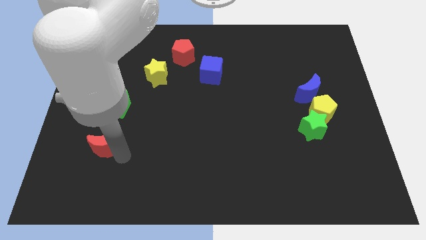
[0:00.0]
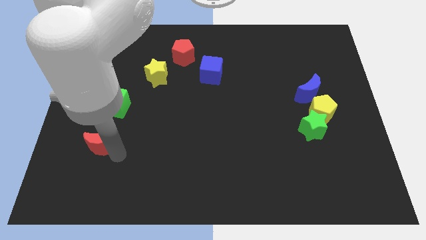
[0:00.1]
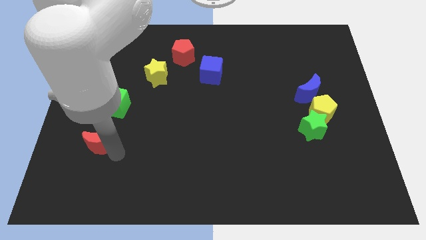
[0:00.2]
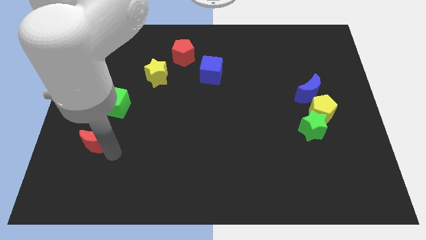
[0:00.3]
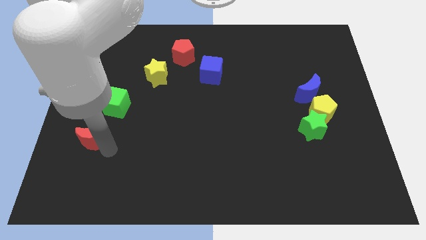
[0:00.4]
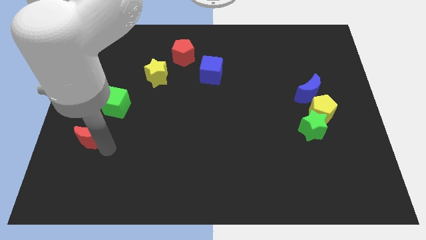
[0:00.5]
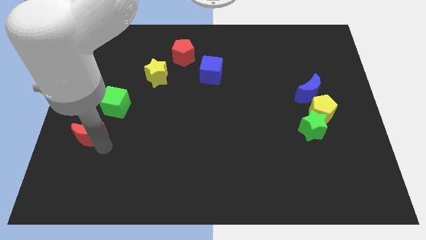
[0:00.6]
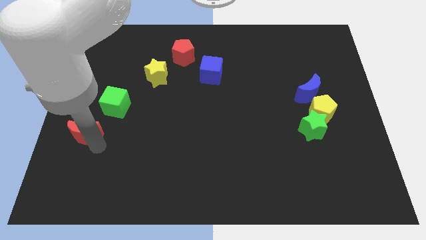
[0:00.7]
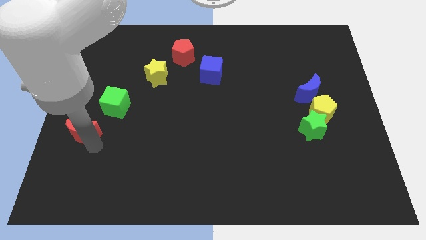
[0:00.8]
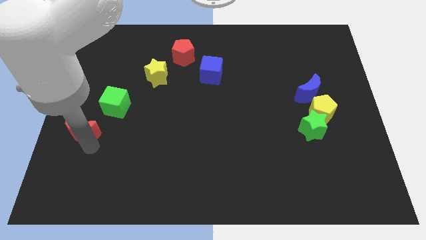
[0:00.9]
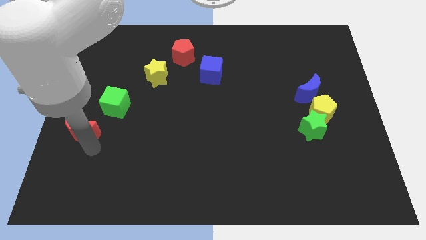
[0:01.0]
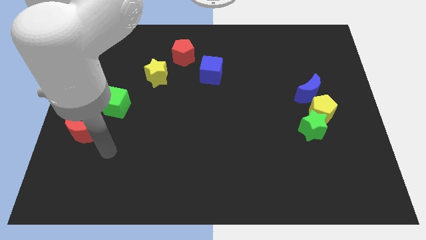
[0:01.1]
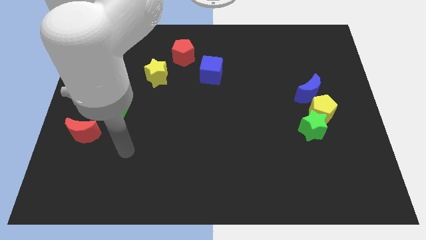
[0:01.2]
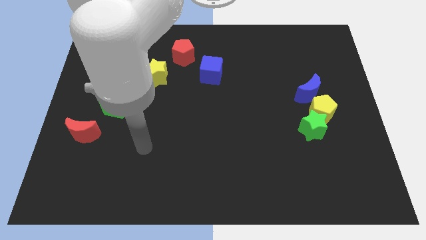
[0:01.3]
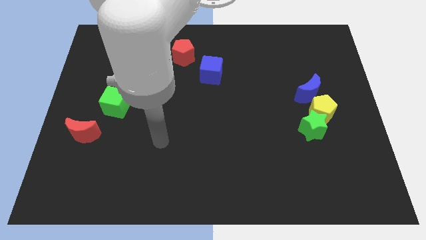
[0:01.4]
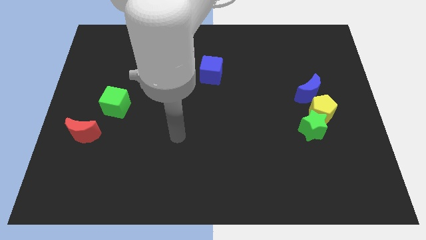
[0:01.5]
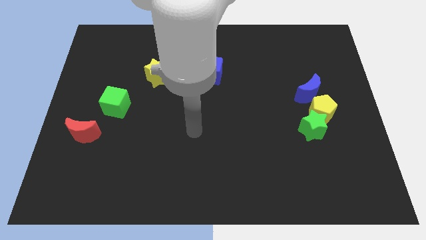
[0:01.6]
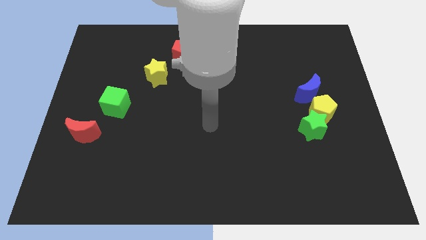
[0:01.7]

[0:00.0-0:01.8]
slide the red moon diagonally bottom left to the green cube

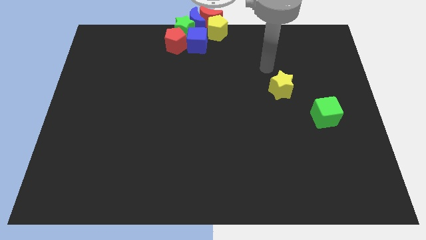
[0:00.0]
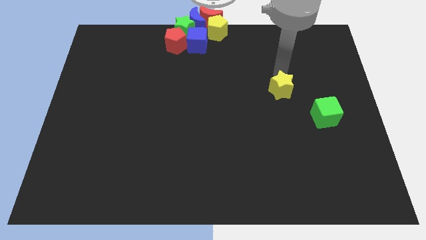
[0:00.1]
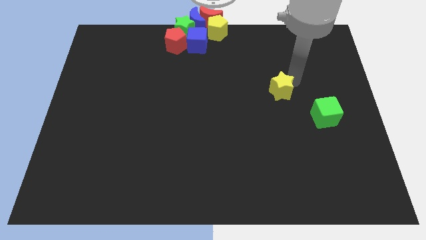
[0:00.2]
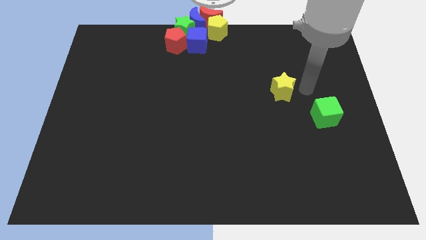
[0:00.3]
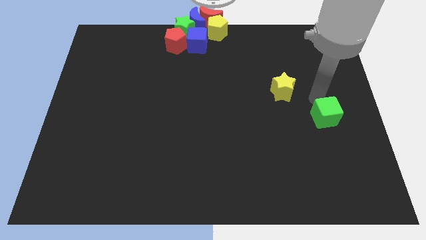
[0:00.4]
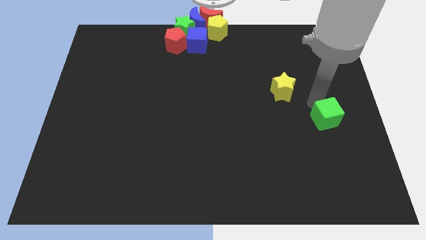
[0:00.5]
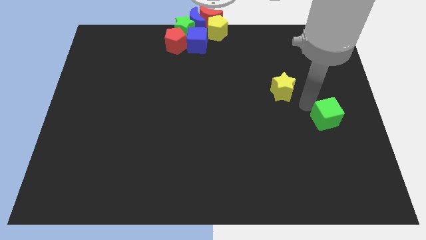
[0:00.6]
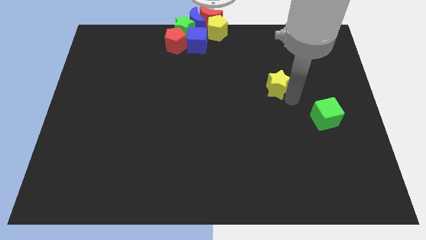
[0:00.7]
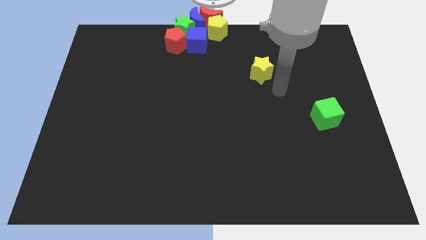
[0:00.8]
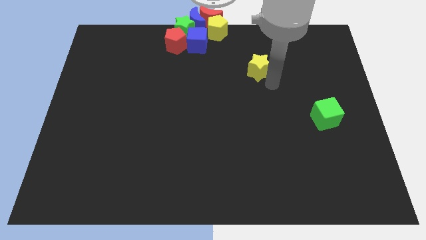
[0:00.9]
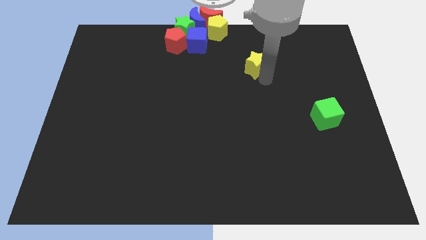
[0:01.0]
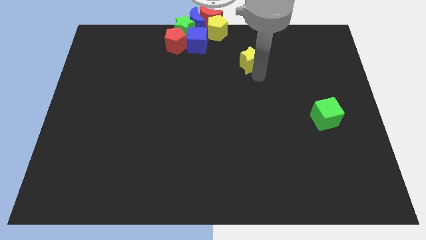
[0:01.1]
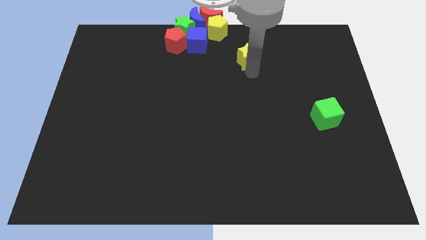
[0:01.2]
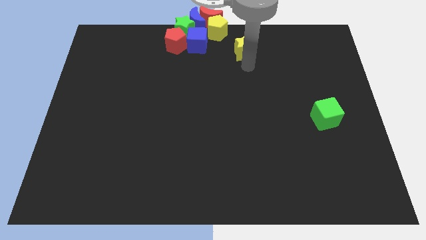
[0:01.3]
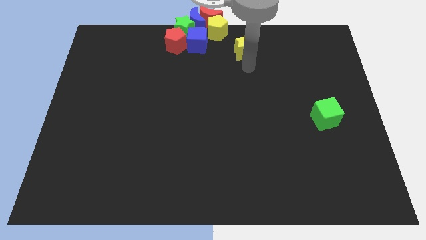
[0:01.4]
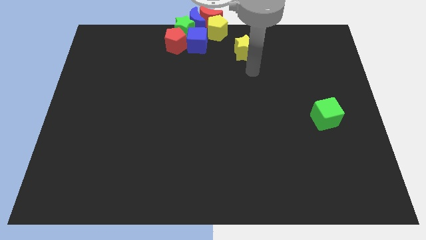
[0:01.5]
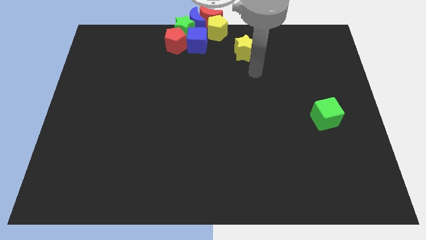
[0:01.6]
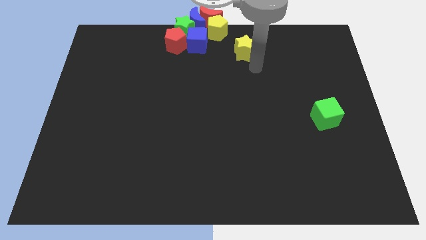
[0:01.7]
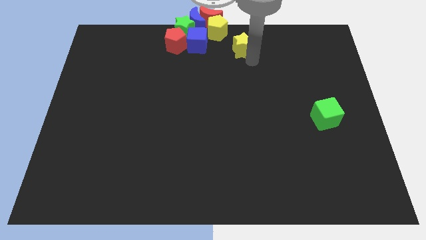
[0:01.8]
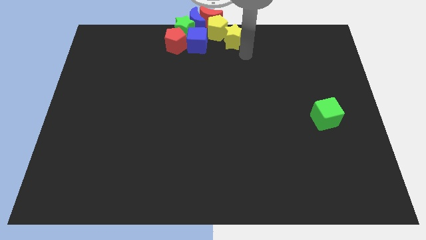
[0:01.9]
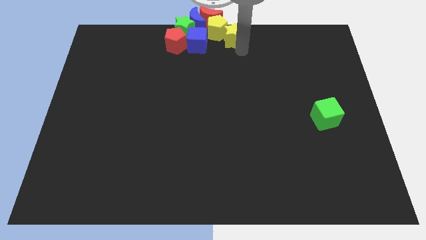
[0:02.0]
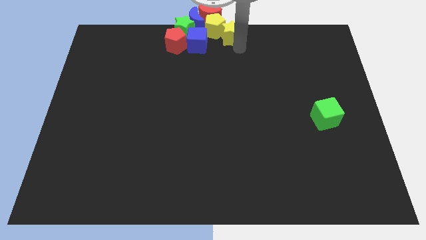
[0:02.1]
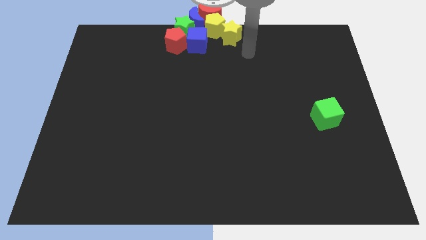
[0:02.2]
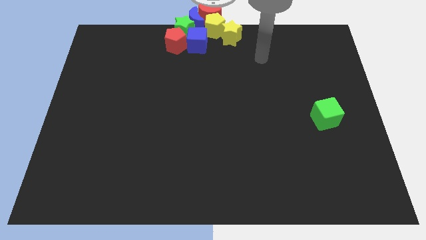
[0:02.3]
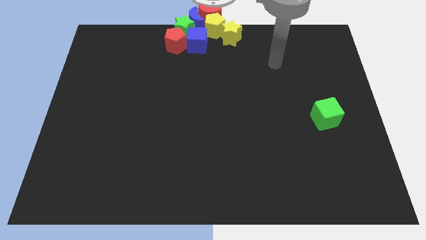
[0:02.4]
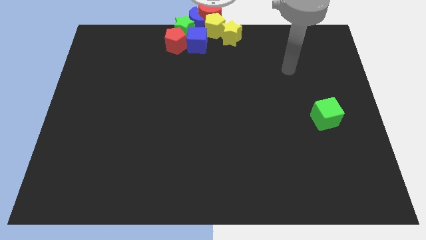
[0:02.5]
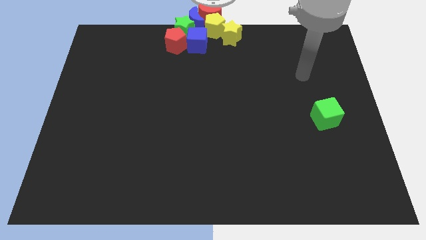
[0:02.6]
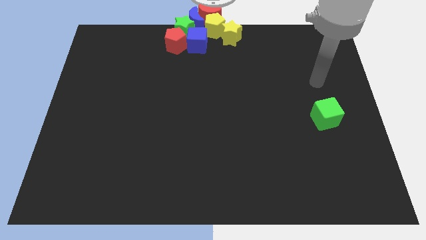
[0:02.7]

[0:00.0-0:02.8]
push yellow star into the yellow pentagon

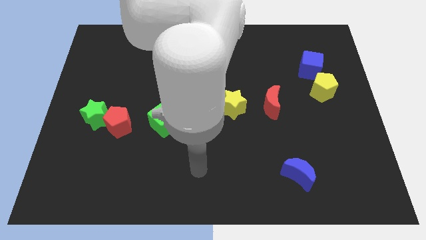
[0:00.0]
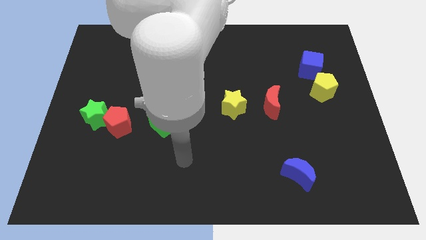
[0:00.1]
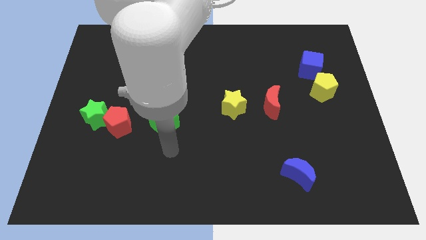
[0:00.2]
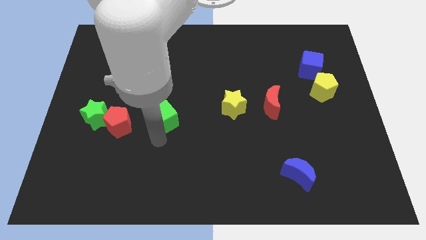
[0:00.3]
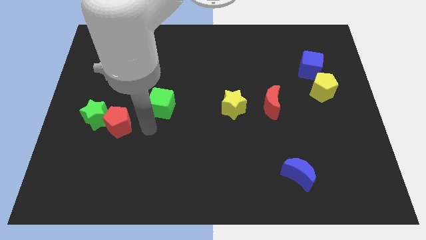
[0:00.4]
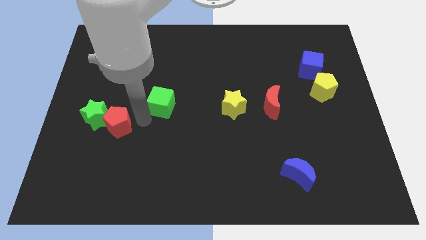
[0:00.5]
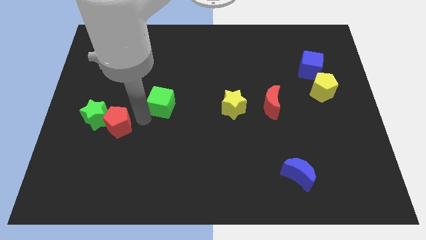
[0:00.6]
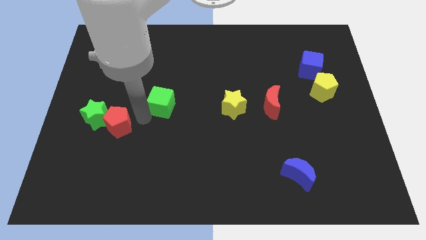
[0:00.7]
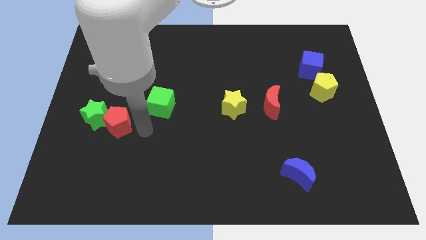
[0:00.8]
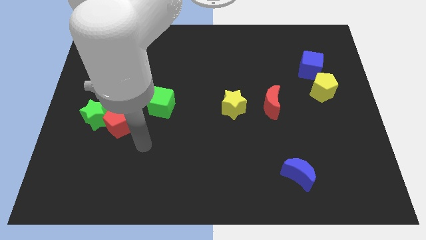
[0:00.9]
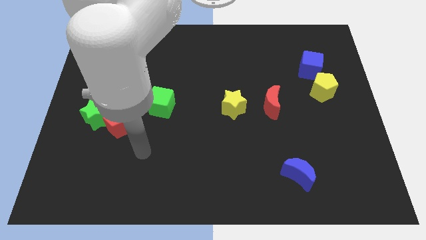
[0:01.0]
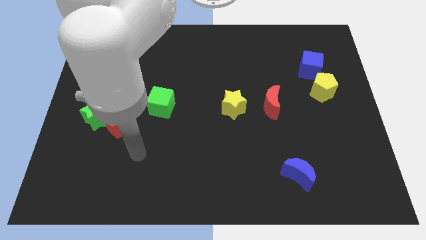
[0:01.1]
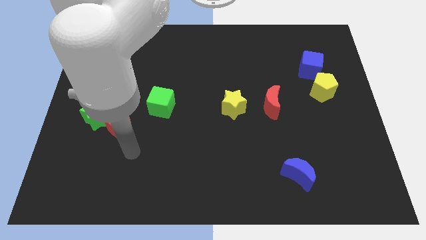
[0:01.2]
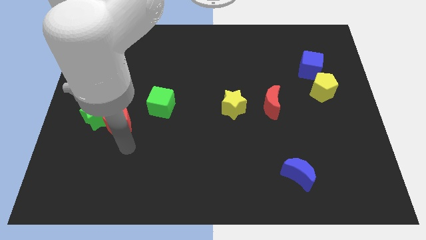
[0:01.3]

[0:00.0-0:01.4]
place the green cube diagonally top right to the red pentagon

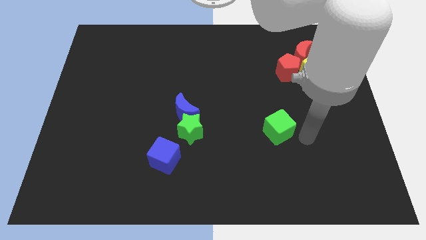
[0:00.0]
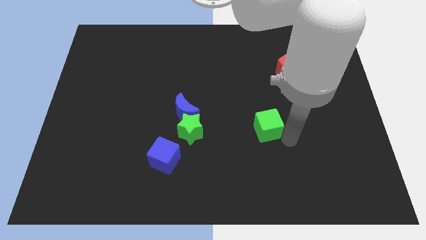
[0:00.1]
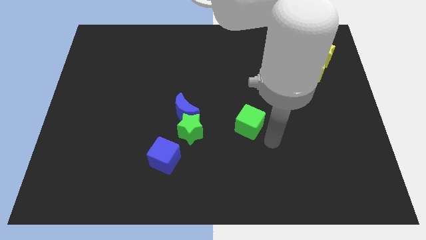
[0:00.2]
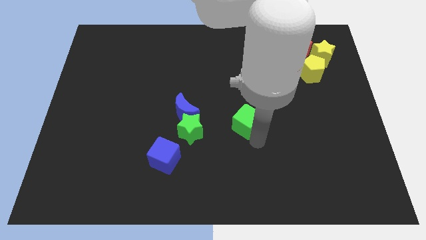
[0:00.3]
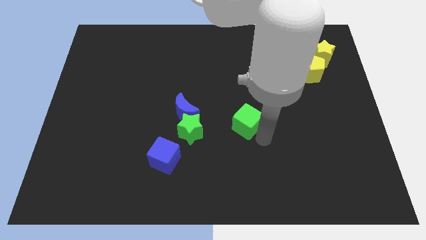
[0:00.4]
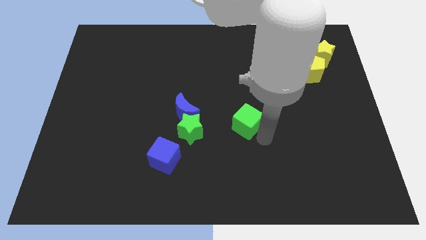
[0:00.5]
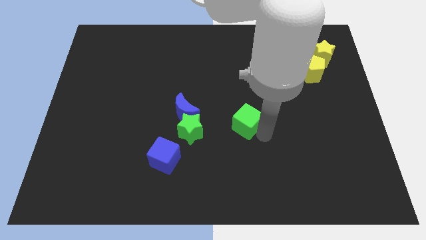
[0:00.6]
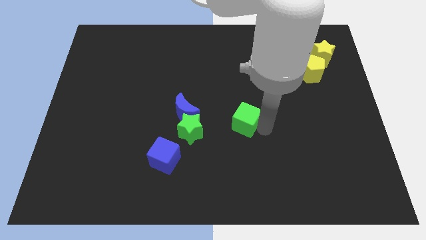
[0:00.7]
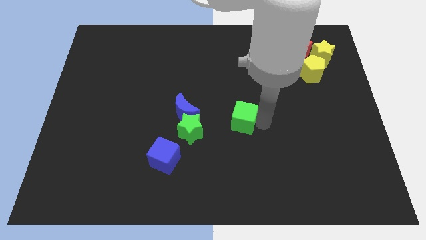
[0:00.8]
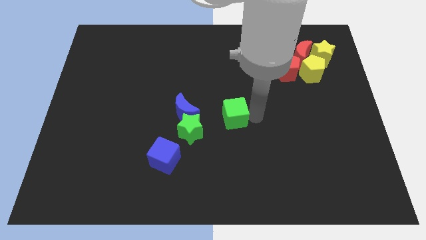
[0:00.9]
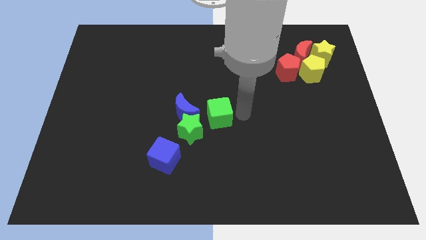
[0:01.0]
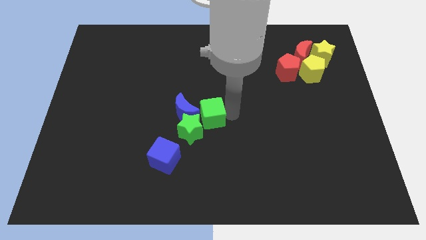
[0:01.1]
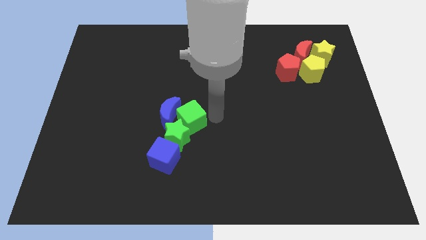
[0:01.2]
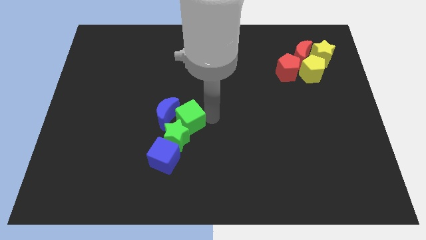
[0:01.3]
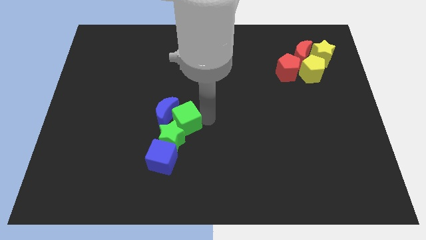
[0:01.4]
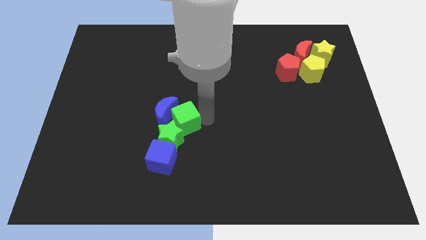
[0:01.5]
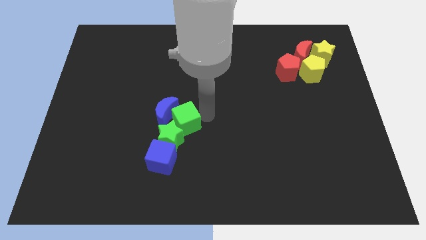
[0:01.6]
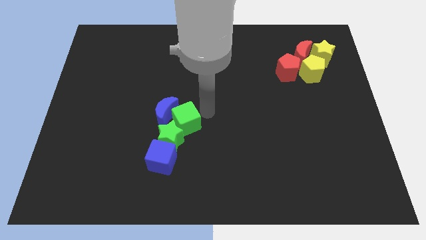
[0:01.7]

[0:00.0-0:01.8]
move the green cube into the green star

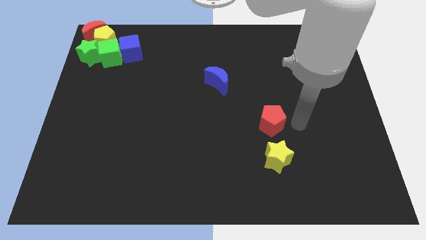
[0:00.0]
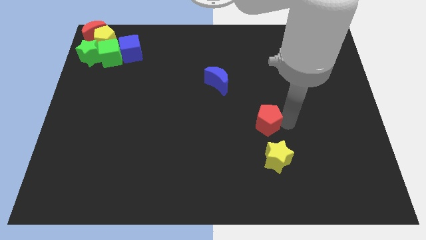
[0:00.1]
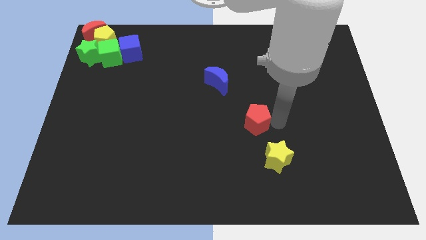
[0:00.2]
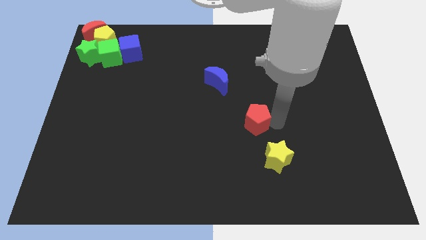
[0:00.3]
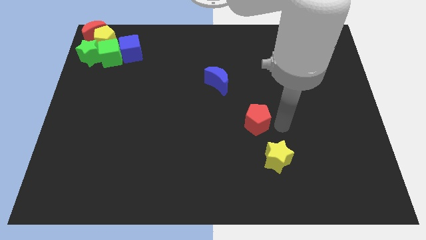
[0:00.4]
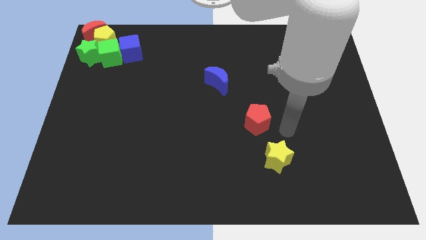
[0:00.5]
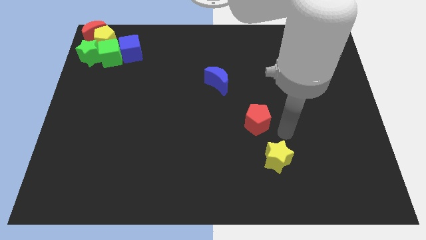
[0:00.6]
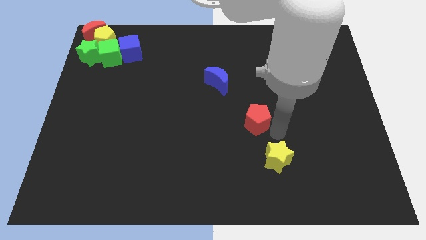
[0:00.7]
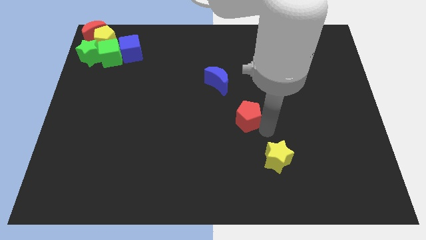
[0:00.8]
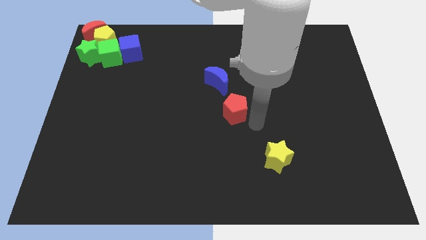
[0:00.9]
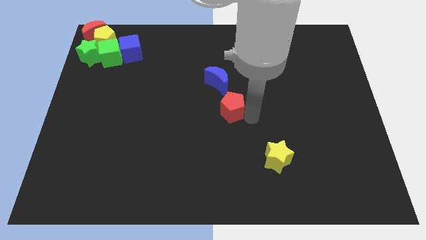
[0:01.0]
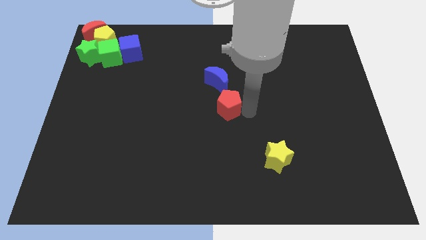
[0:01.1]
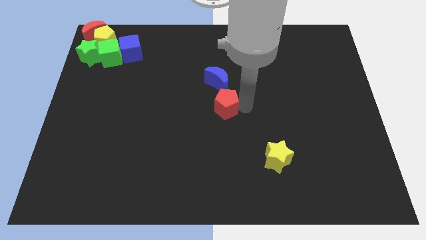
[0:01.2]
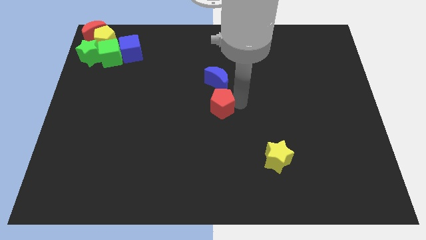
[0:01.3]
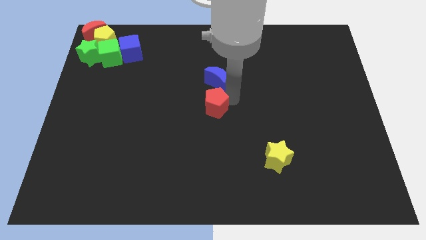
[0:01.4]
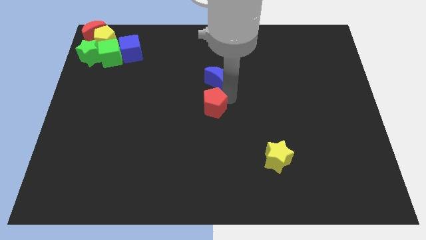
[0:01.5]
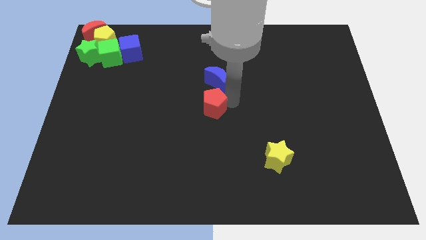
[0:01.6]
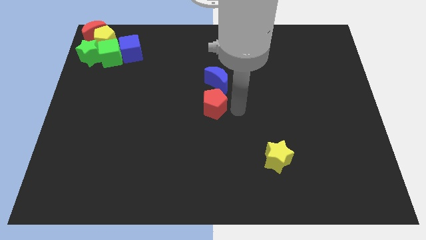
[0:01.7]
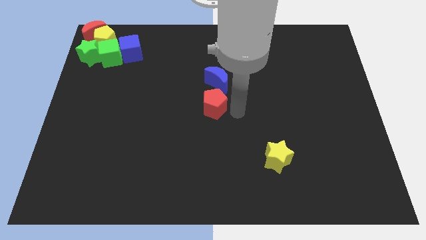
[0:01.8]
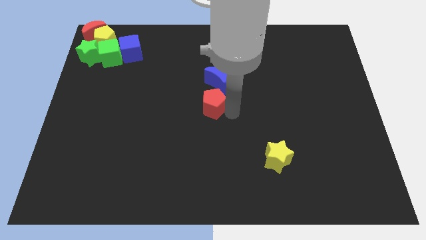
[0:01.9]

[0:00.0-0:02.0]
place the red pentagon at the centre of the board
